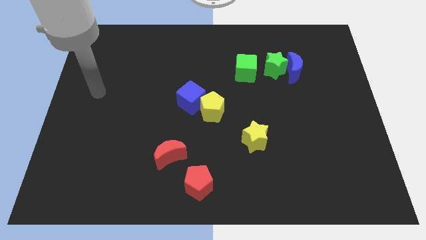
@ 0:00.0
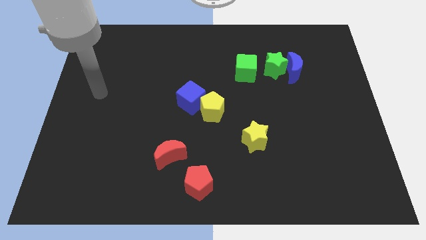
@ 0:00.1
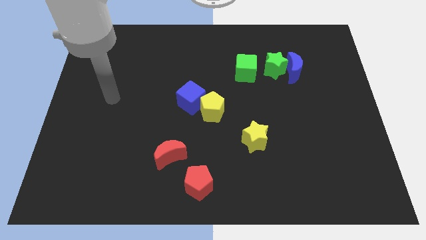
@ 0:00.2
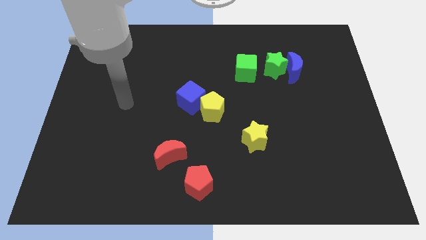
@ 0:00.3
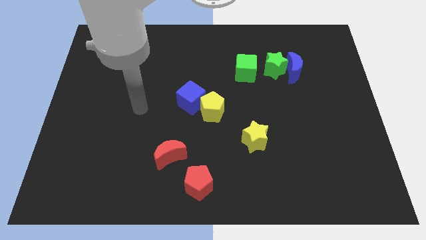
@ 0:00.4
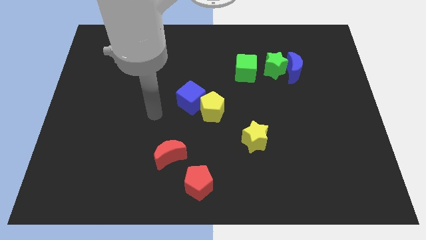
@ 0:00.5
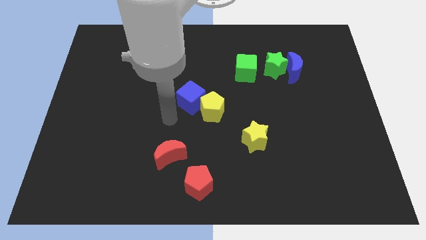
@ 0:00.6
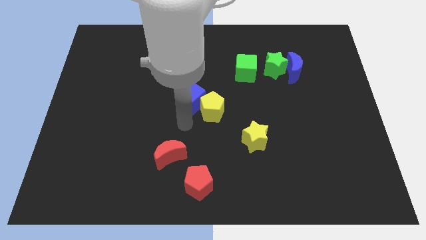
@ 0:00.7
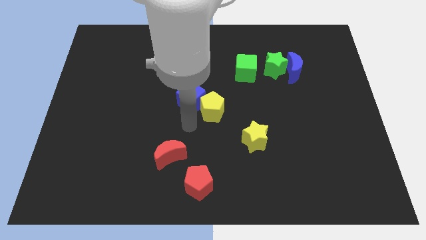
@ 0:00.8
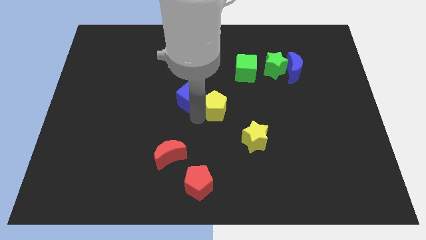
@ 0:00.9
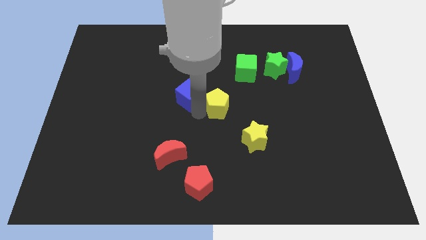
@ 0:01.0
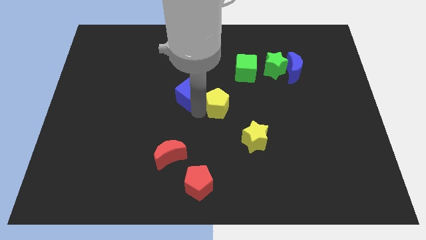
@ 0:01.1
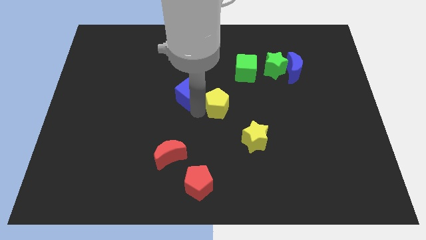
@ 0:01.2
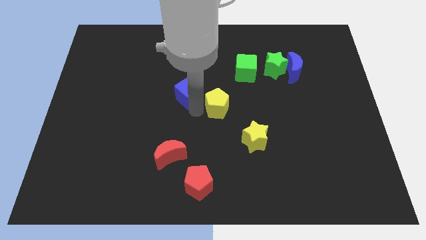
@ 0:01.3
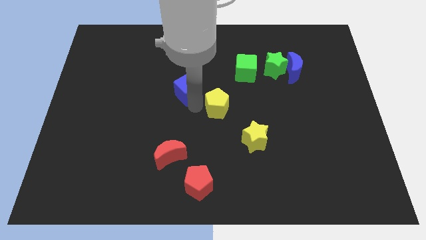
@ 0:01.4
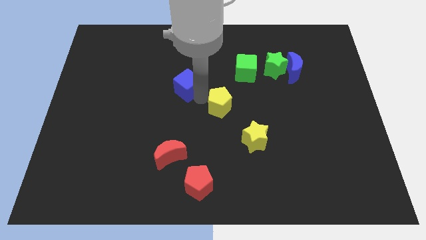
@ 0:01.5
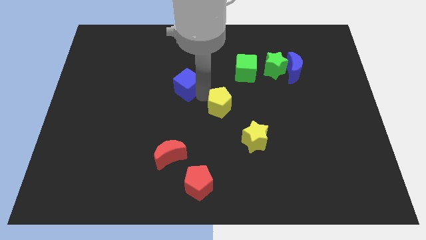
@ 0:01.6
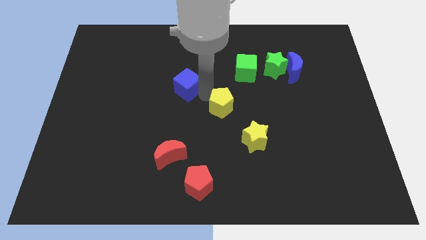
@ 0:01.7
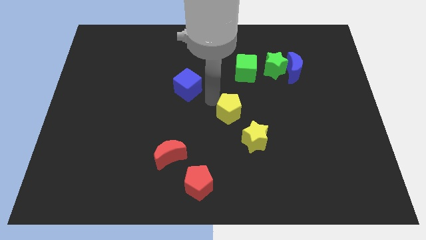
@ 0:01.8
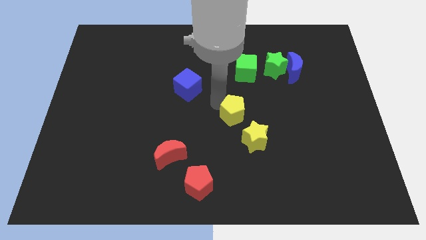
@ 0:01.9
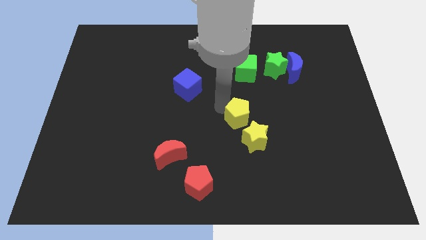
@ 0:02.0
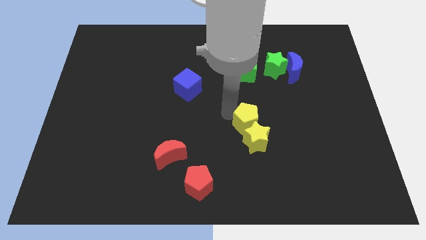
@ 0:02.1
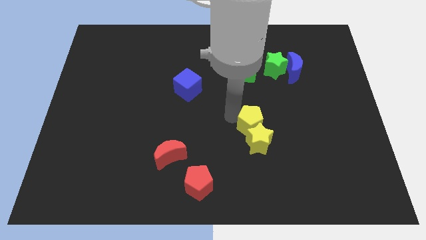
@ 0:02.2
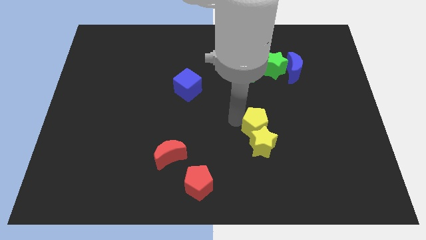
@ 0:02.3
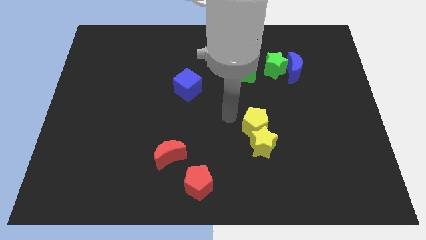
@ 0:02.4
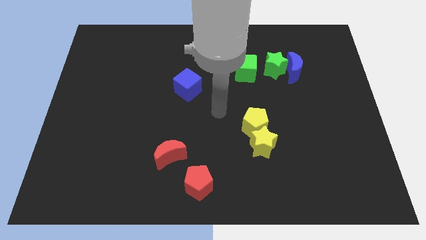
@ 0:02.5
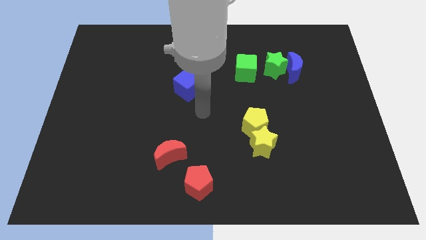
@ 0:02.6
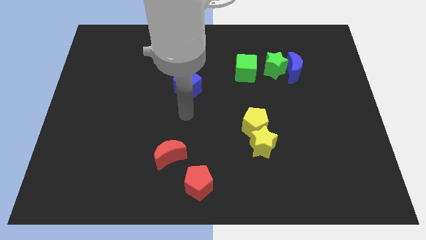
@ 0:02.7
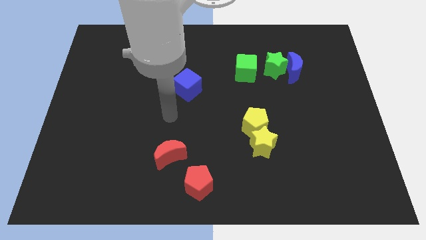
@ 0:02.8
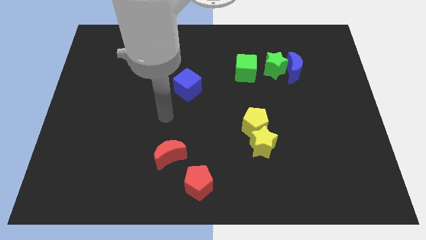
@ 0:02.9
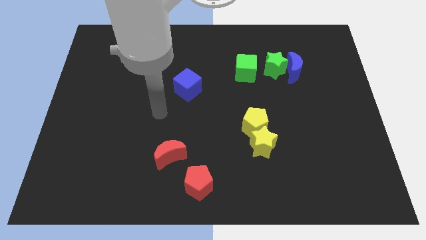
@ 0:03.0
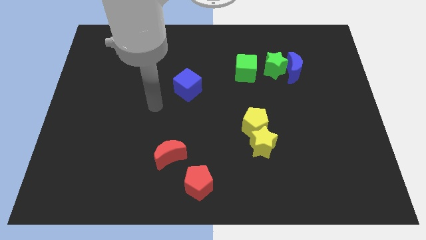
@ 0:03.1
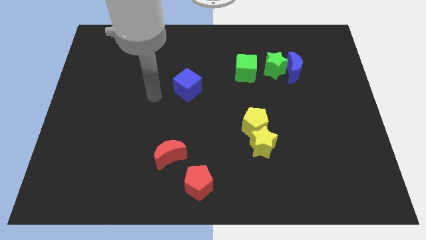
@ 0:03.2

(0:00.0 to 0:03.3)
place the yellow pentagon above the yellow star

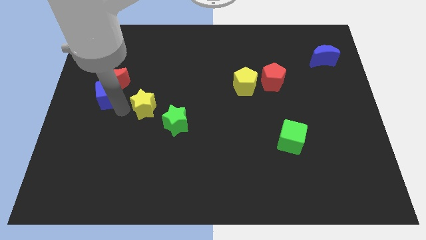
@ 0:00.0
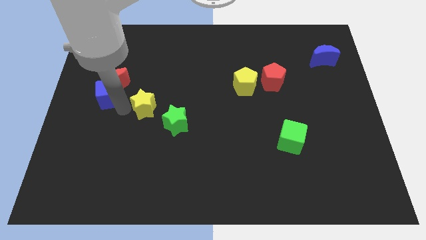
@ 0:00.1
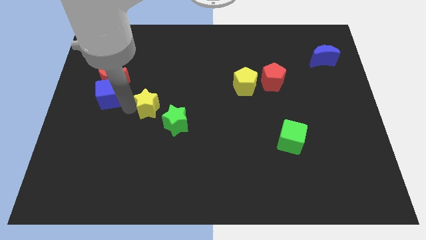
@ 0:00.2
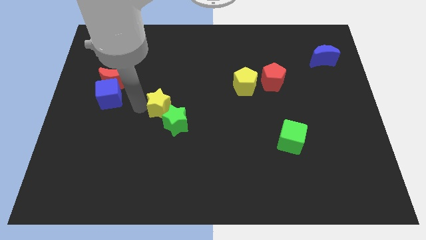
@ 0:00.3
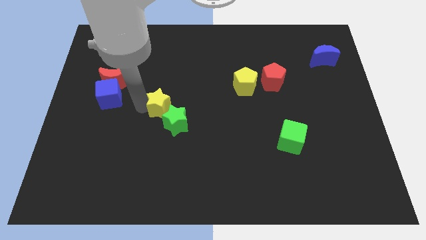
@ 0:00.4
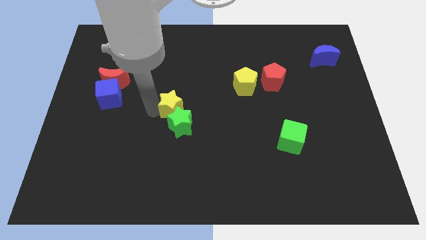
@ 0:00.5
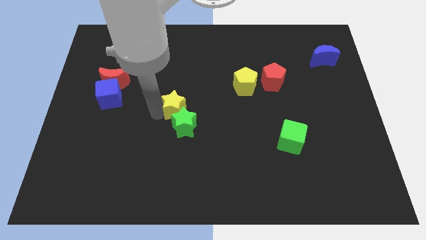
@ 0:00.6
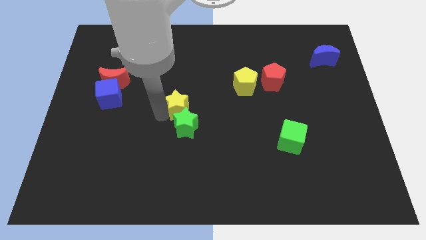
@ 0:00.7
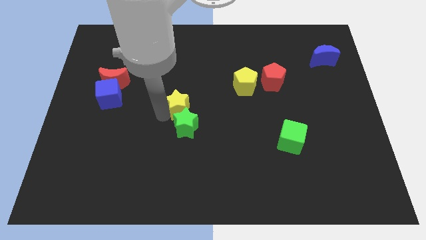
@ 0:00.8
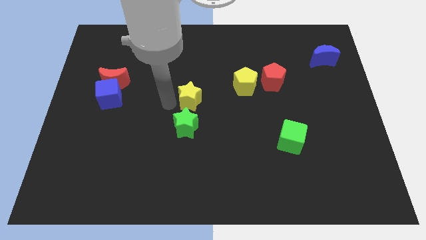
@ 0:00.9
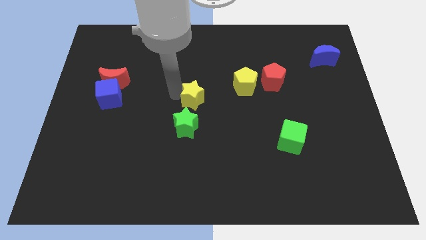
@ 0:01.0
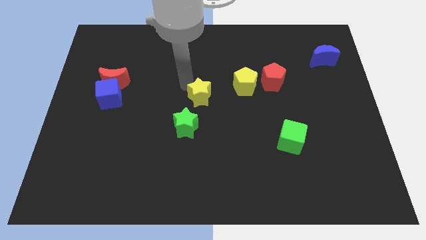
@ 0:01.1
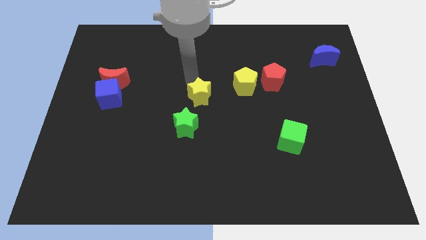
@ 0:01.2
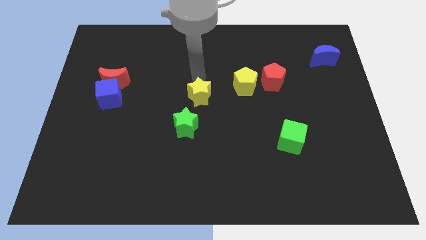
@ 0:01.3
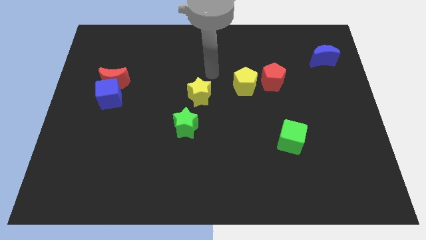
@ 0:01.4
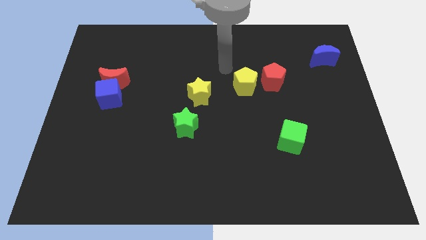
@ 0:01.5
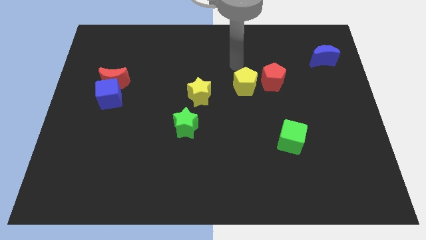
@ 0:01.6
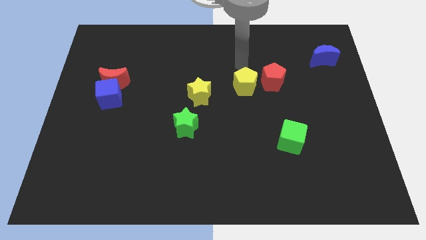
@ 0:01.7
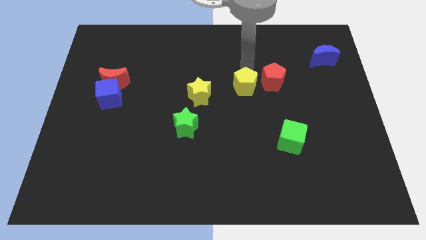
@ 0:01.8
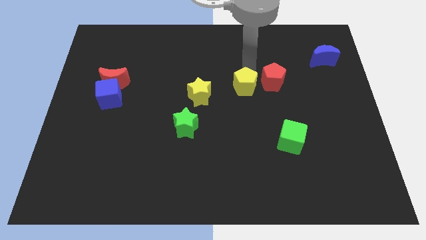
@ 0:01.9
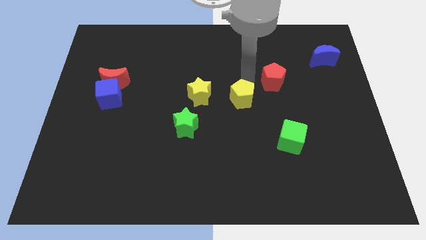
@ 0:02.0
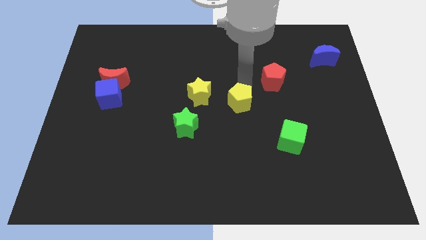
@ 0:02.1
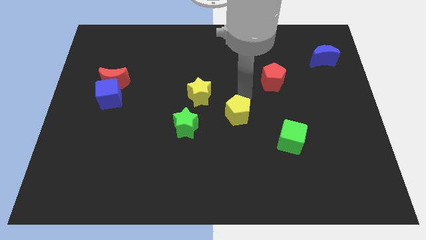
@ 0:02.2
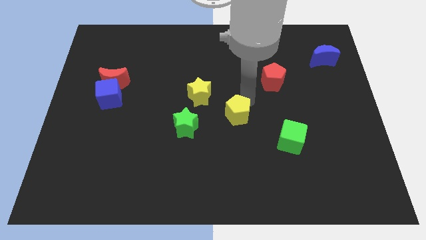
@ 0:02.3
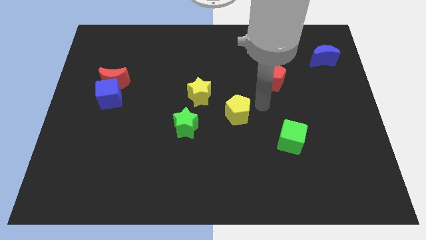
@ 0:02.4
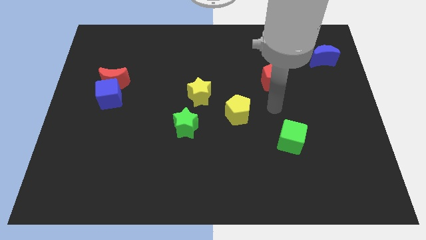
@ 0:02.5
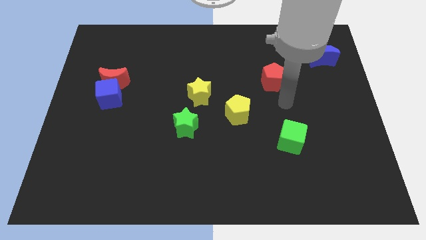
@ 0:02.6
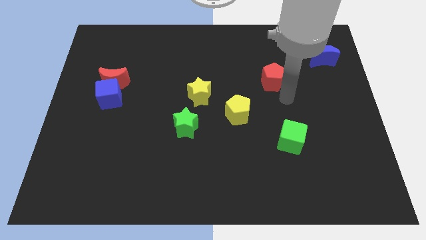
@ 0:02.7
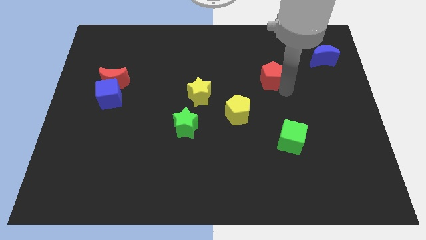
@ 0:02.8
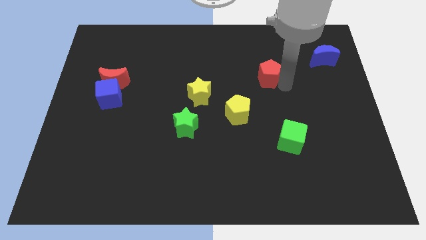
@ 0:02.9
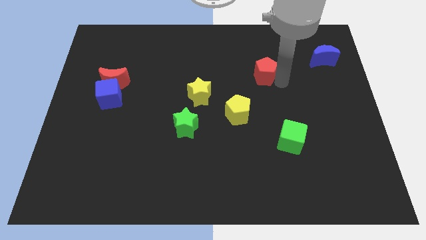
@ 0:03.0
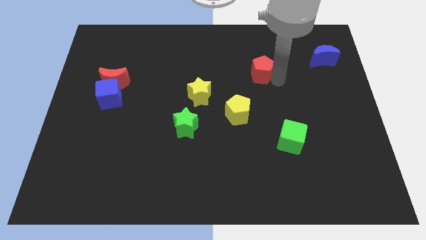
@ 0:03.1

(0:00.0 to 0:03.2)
pus yellow pentagon diagonally between yellow star and green cube

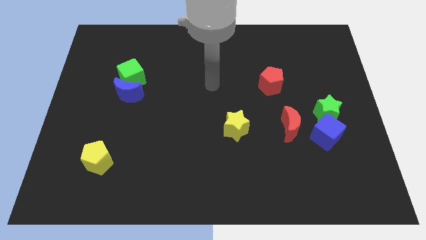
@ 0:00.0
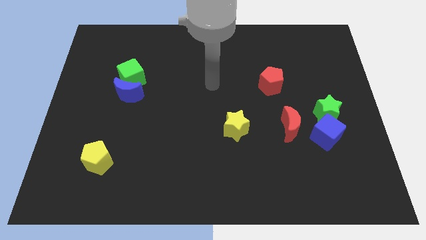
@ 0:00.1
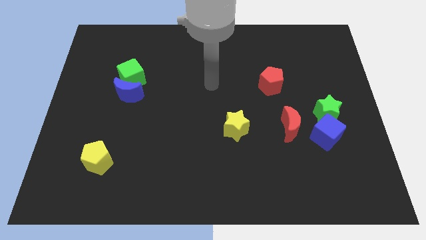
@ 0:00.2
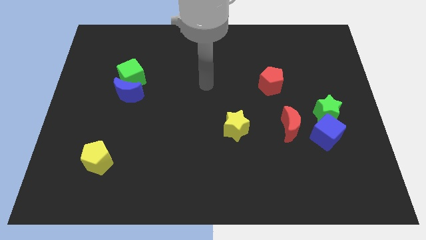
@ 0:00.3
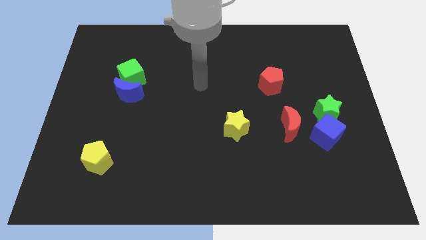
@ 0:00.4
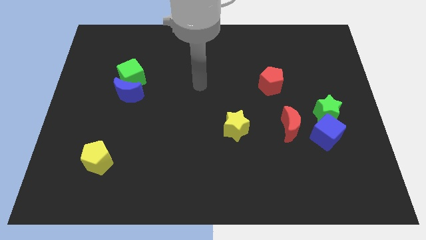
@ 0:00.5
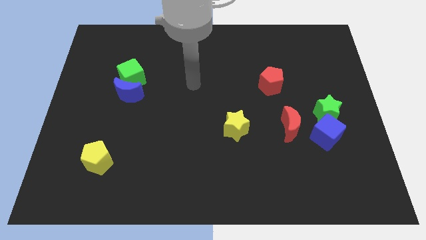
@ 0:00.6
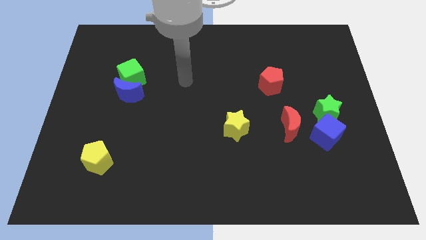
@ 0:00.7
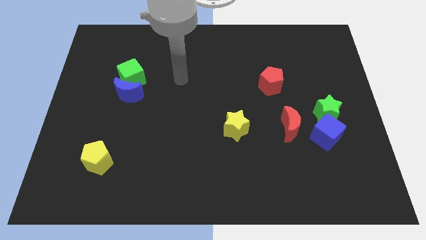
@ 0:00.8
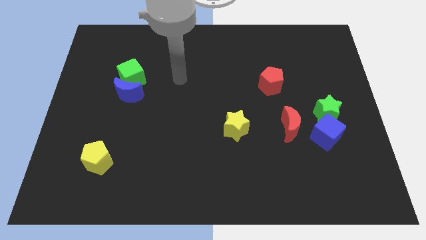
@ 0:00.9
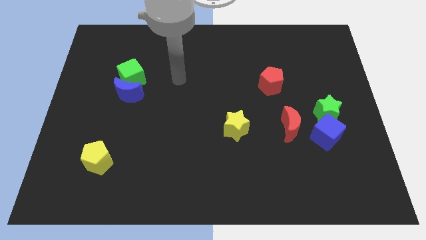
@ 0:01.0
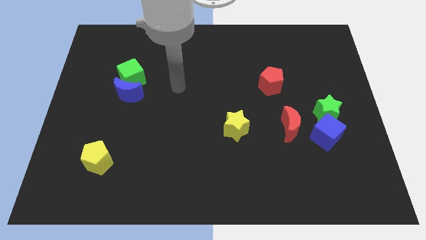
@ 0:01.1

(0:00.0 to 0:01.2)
move your hand towards the left side

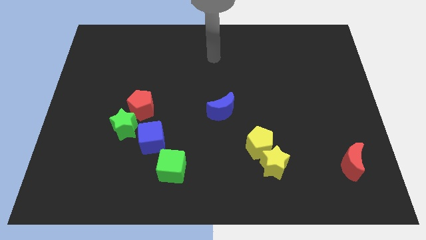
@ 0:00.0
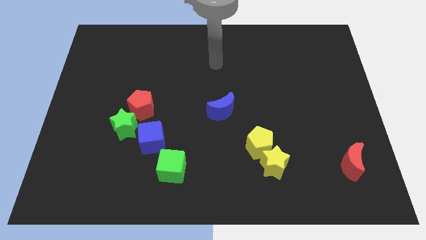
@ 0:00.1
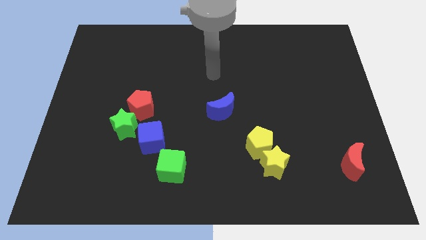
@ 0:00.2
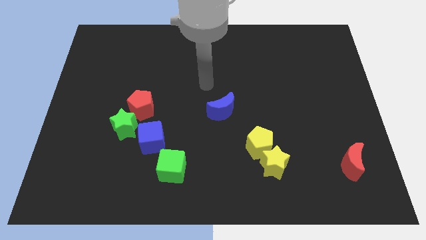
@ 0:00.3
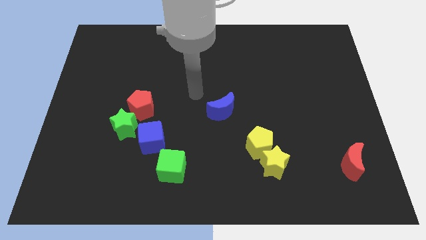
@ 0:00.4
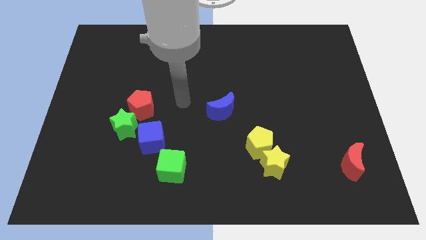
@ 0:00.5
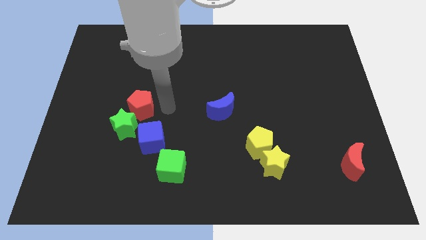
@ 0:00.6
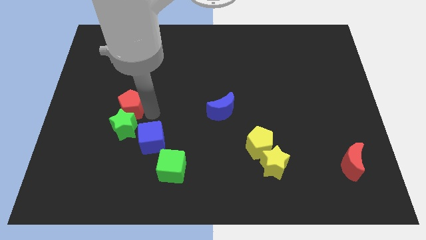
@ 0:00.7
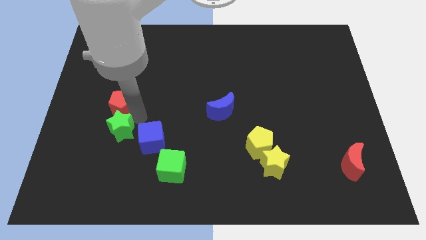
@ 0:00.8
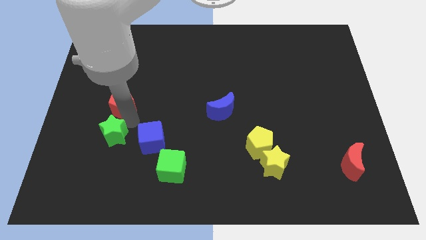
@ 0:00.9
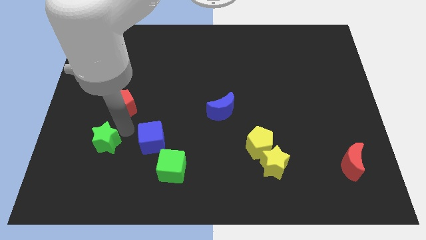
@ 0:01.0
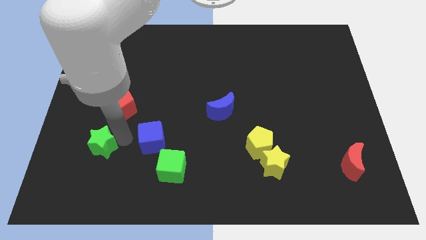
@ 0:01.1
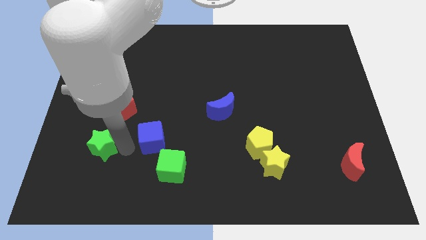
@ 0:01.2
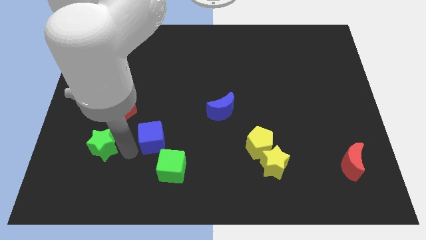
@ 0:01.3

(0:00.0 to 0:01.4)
separate the red pentagon from the green star
